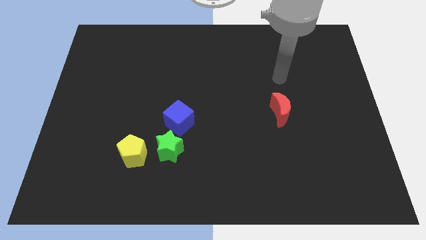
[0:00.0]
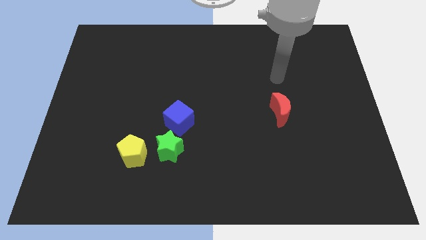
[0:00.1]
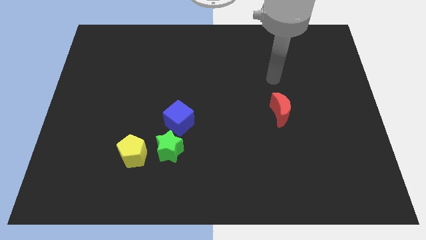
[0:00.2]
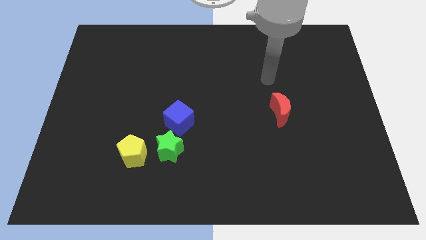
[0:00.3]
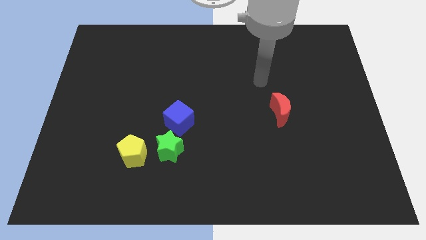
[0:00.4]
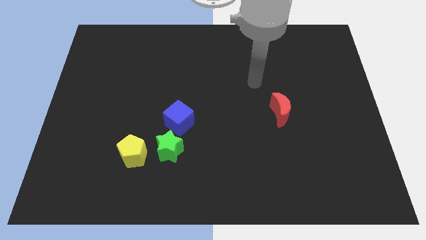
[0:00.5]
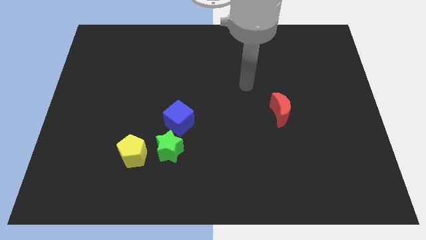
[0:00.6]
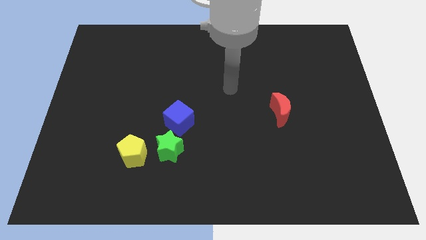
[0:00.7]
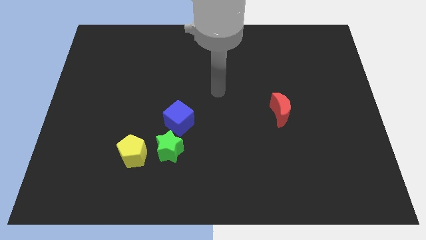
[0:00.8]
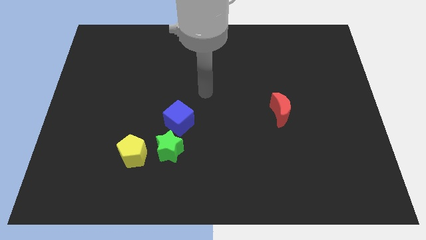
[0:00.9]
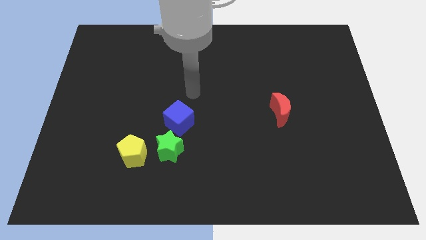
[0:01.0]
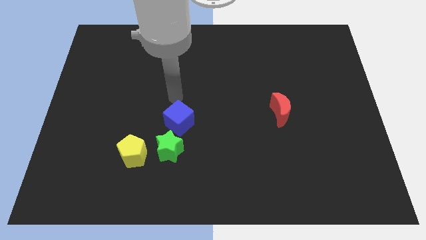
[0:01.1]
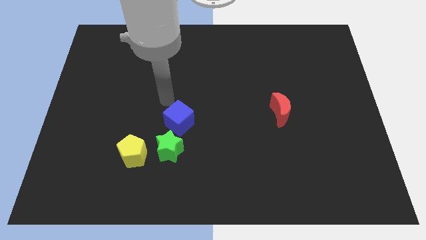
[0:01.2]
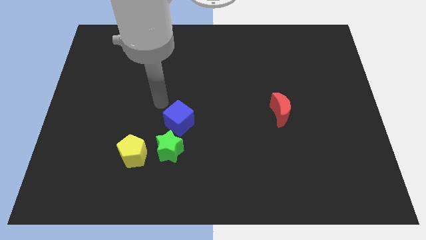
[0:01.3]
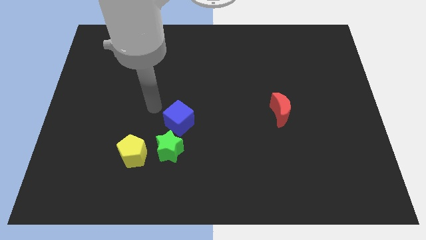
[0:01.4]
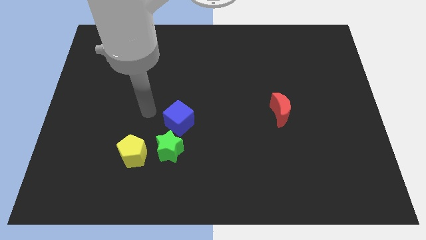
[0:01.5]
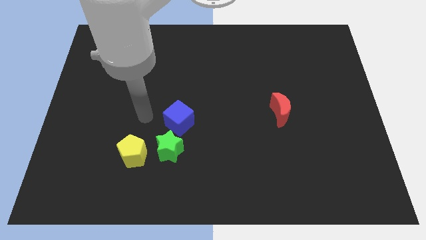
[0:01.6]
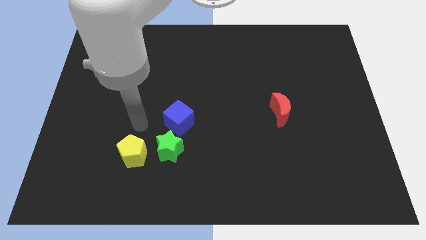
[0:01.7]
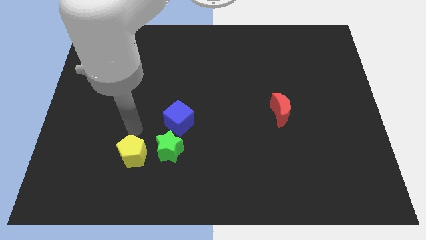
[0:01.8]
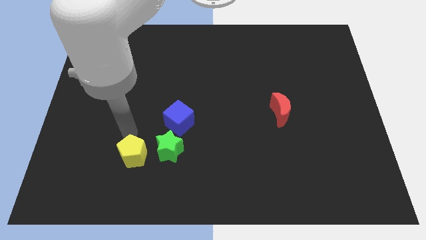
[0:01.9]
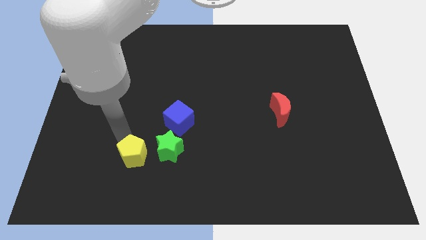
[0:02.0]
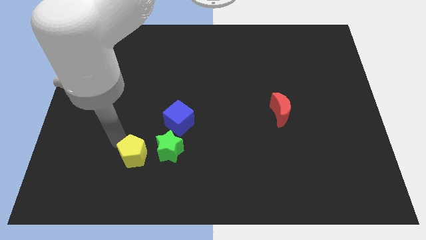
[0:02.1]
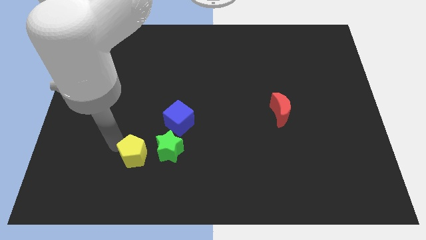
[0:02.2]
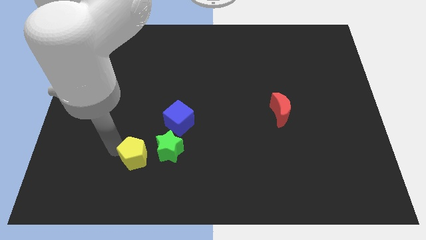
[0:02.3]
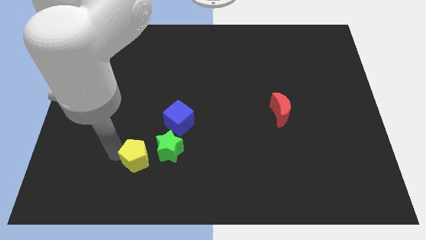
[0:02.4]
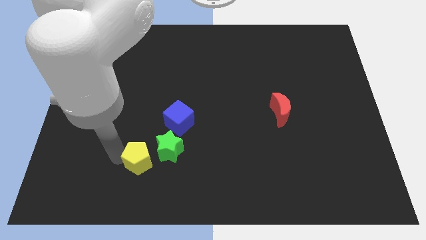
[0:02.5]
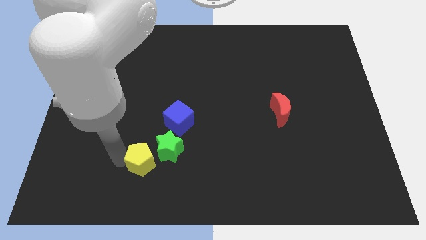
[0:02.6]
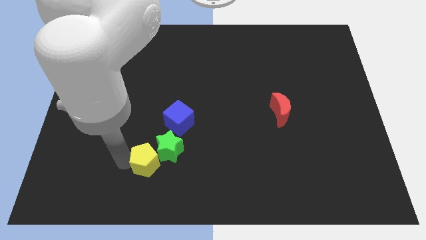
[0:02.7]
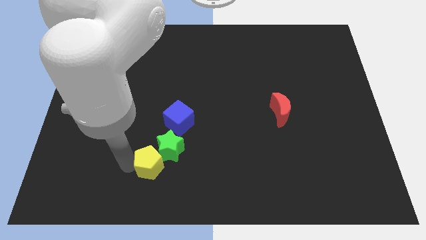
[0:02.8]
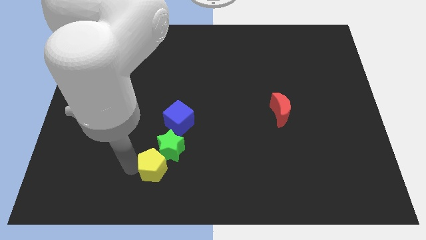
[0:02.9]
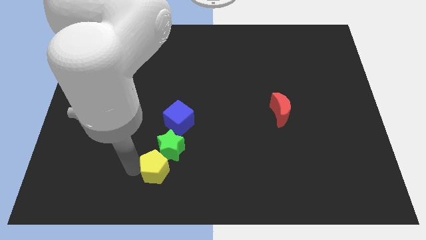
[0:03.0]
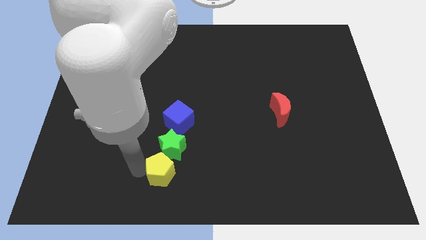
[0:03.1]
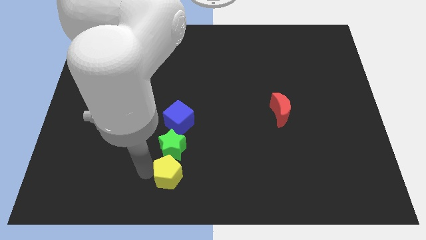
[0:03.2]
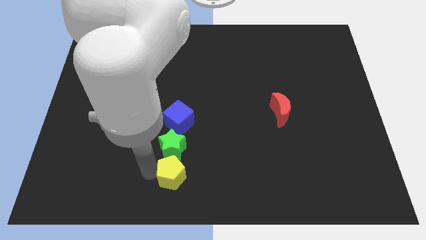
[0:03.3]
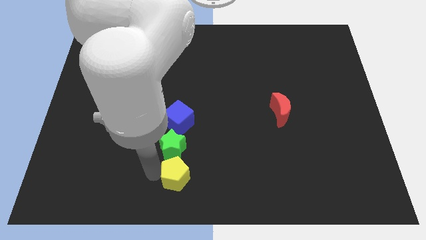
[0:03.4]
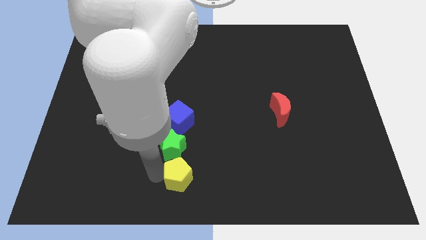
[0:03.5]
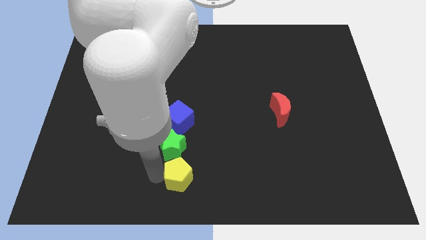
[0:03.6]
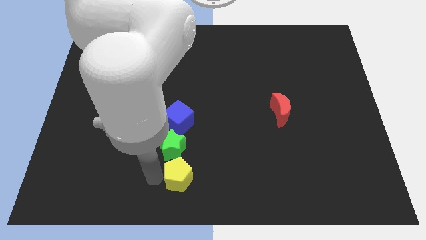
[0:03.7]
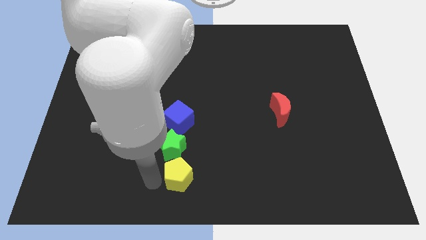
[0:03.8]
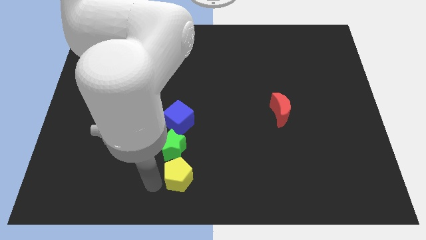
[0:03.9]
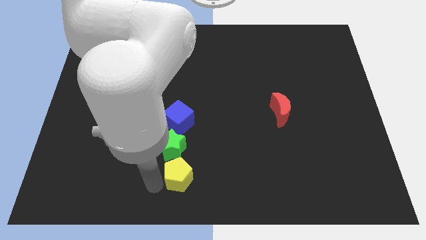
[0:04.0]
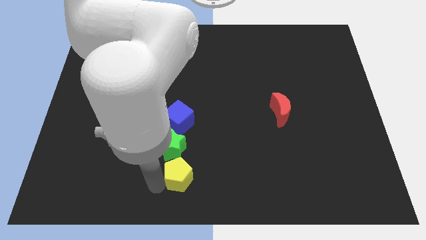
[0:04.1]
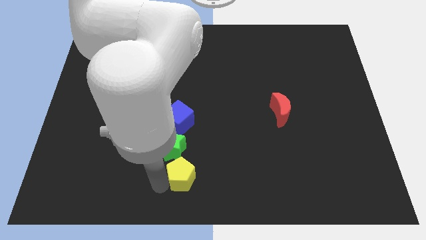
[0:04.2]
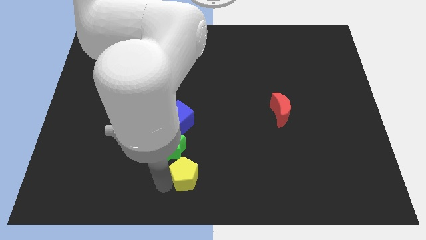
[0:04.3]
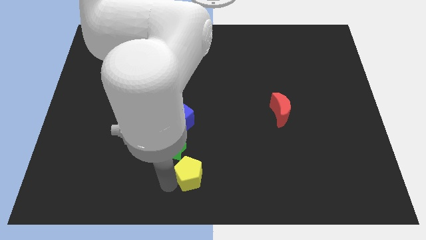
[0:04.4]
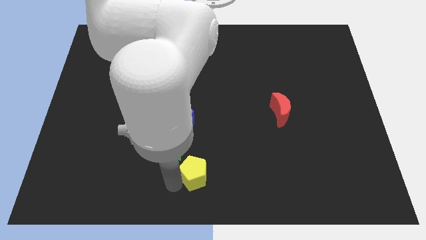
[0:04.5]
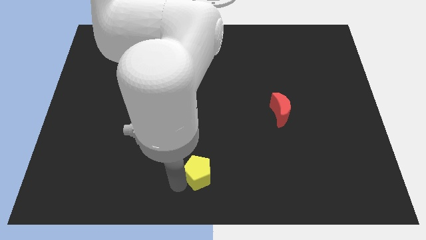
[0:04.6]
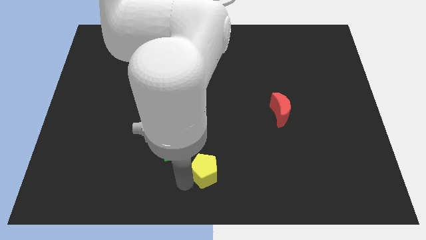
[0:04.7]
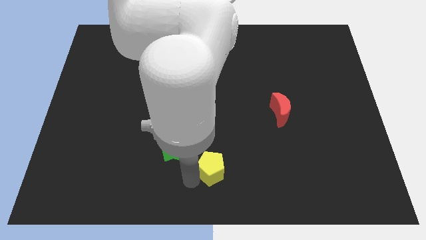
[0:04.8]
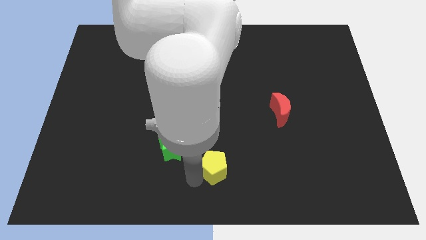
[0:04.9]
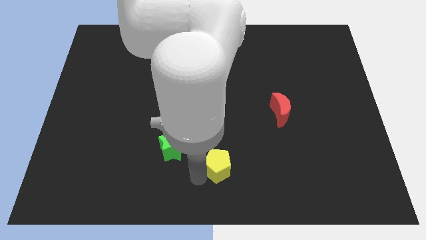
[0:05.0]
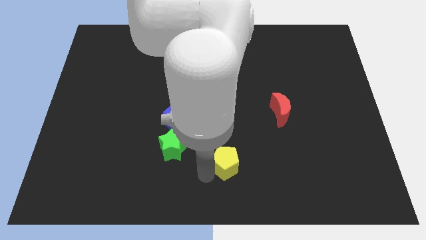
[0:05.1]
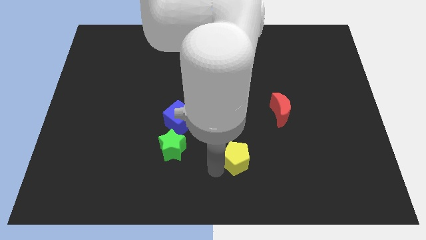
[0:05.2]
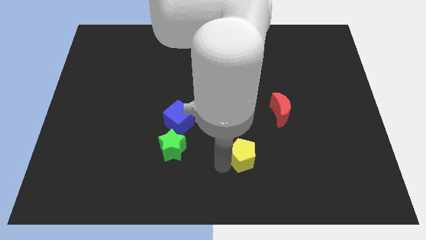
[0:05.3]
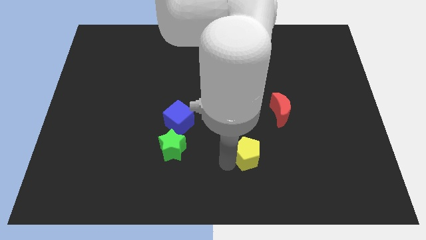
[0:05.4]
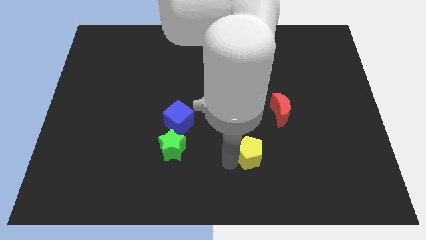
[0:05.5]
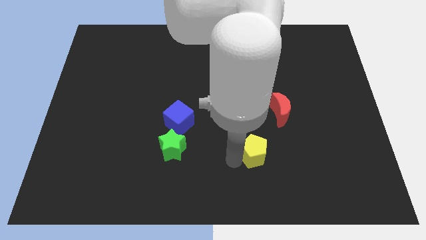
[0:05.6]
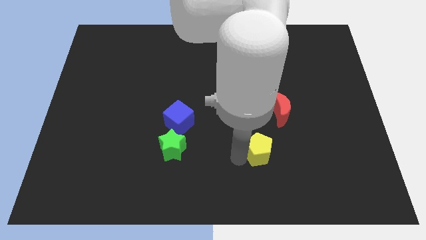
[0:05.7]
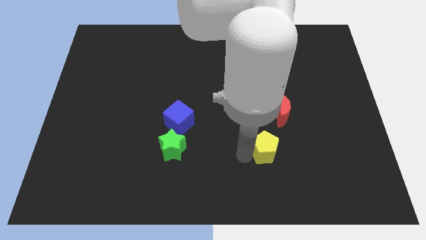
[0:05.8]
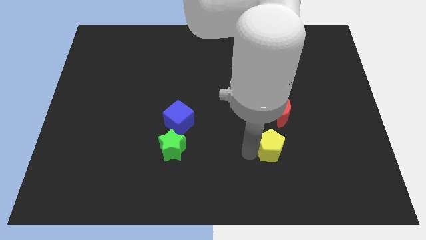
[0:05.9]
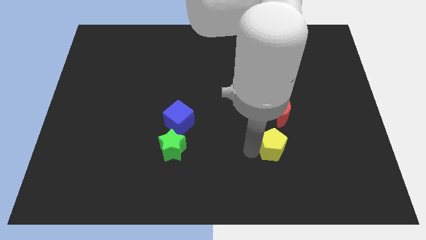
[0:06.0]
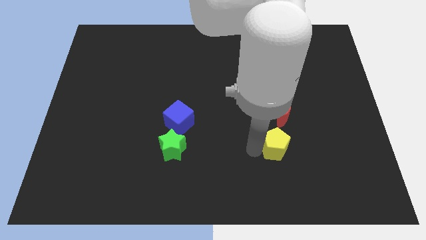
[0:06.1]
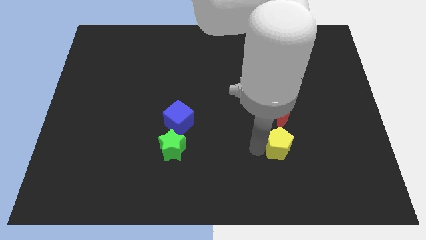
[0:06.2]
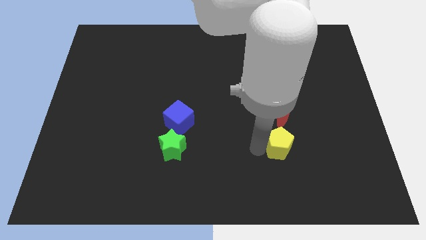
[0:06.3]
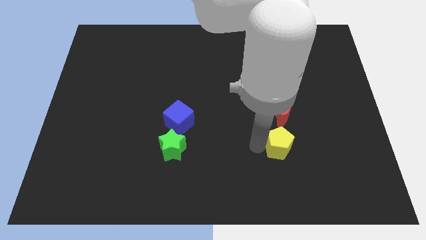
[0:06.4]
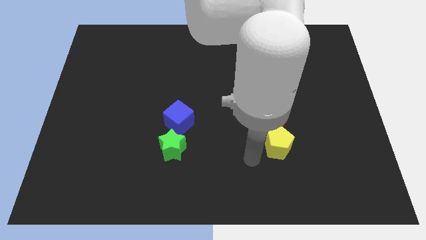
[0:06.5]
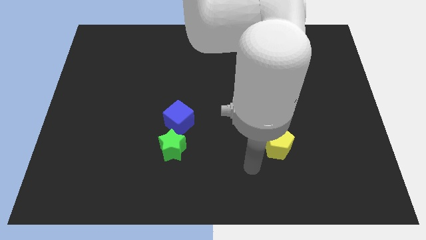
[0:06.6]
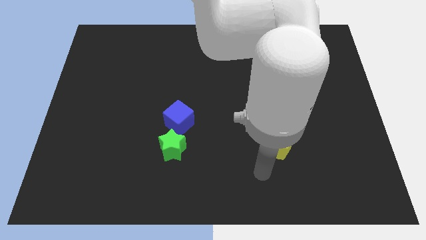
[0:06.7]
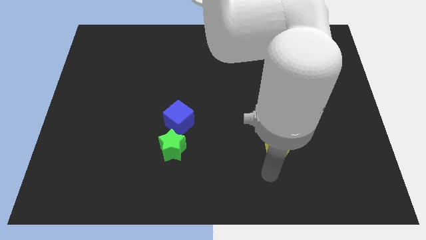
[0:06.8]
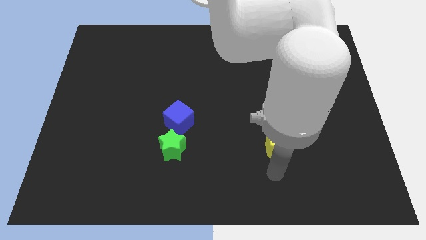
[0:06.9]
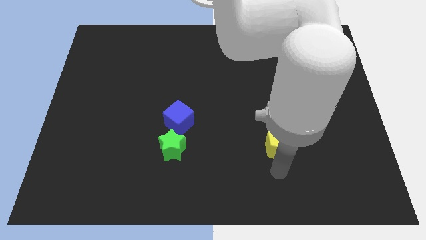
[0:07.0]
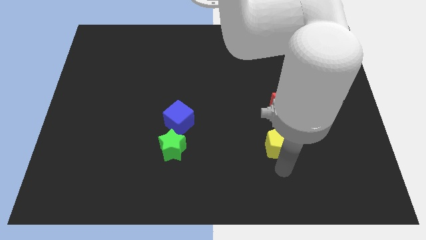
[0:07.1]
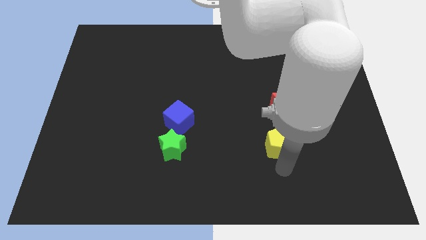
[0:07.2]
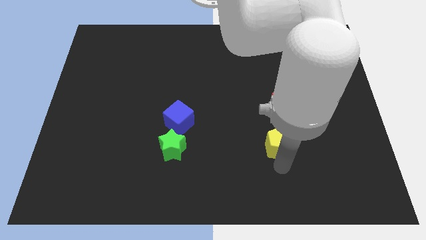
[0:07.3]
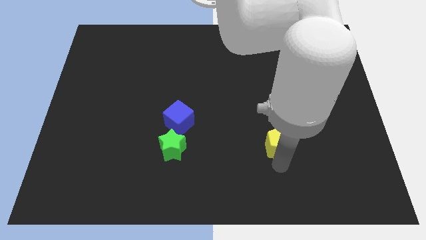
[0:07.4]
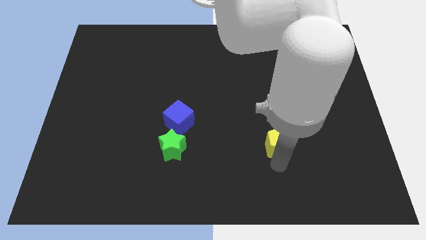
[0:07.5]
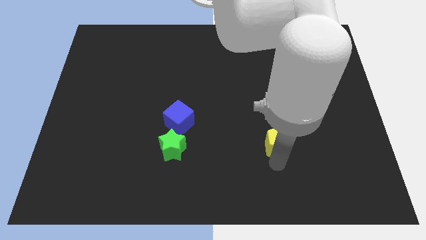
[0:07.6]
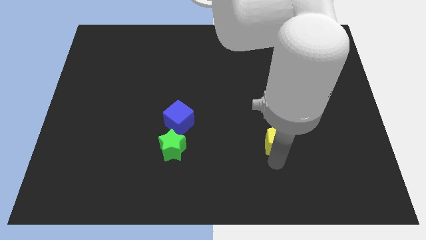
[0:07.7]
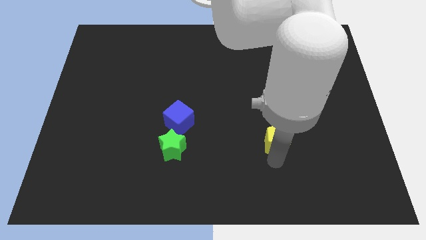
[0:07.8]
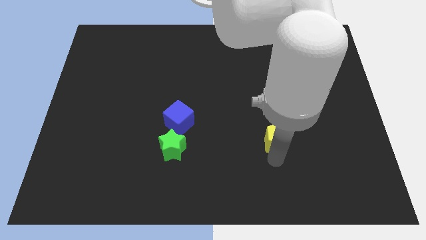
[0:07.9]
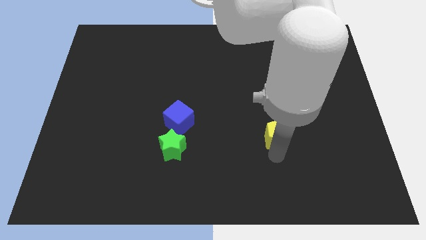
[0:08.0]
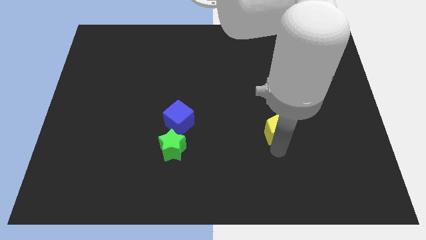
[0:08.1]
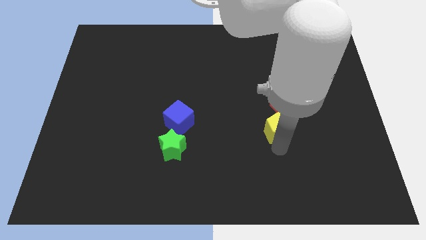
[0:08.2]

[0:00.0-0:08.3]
push the pentagon close to the red moon
